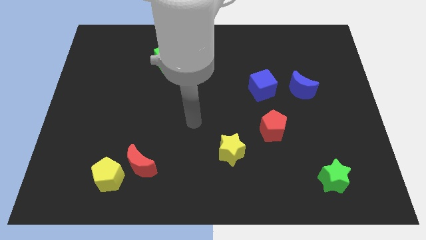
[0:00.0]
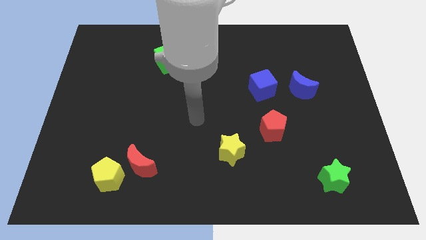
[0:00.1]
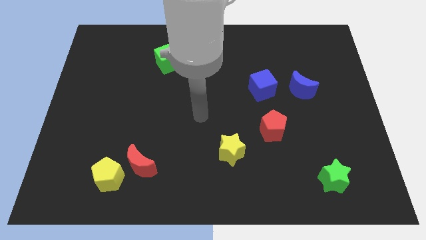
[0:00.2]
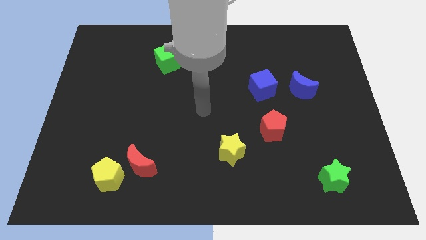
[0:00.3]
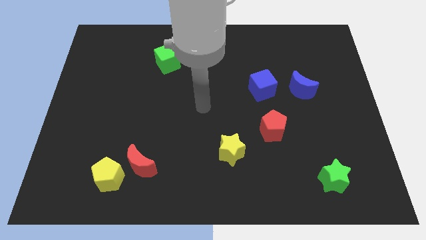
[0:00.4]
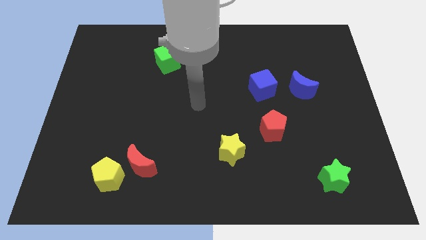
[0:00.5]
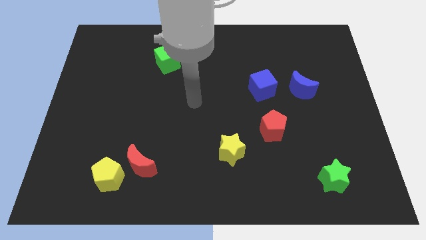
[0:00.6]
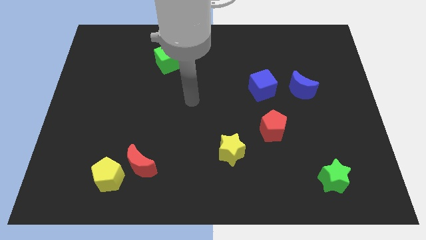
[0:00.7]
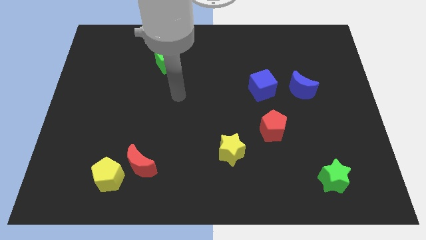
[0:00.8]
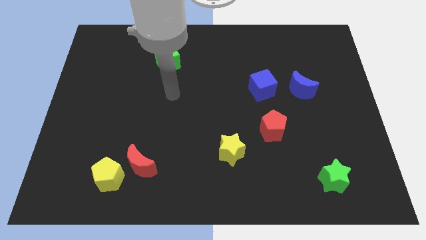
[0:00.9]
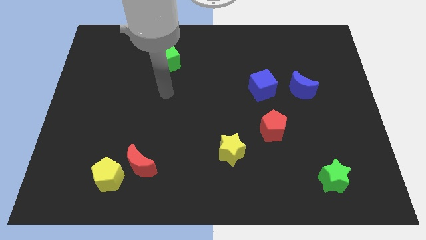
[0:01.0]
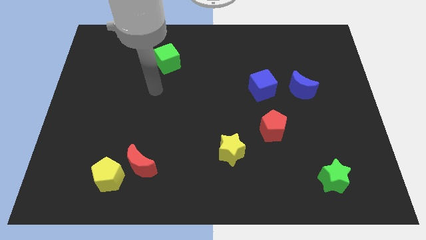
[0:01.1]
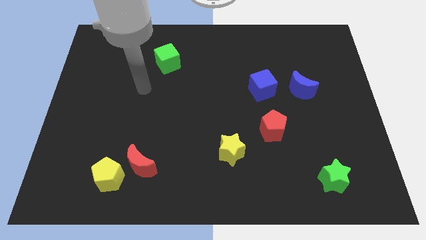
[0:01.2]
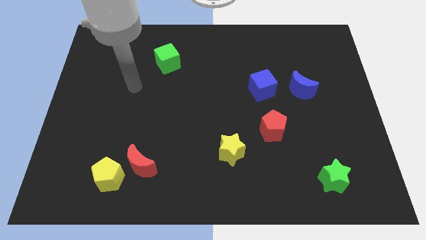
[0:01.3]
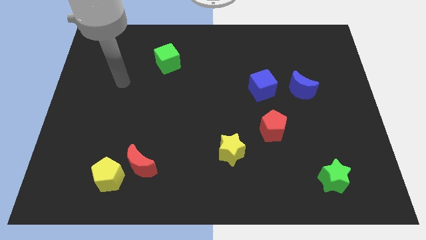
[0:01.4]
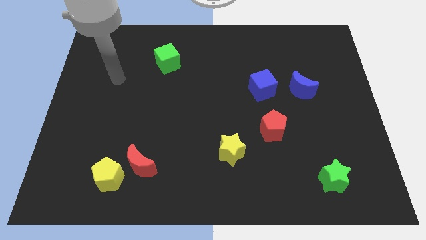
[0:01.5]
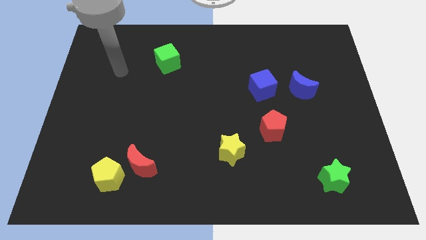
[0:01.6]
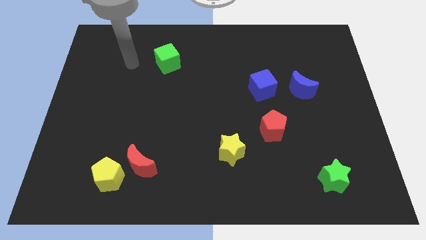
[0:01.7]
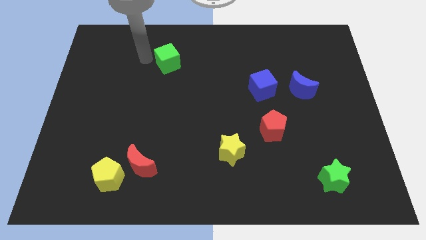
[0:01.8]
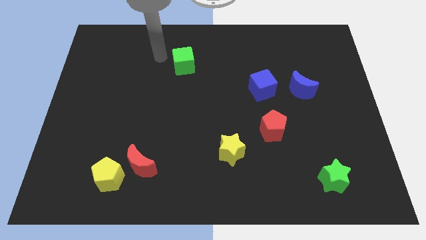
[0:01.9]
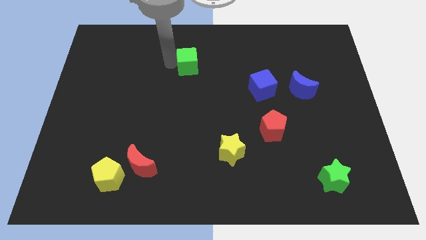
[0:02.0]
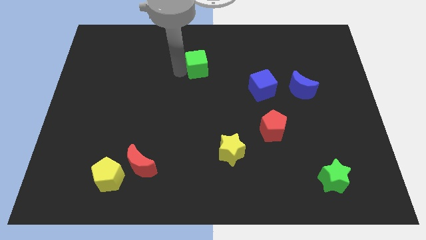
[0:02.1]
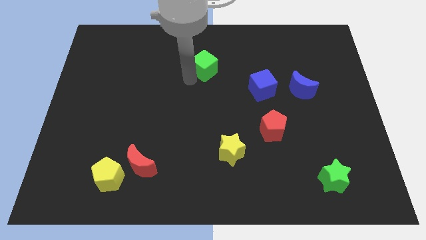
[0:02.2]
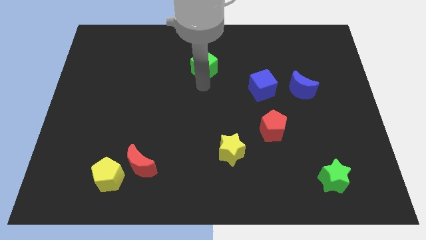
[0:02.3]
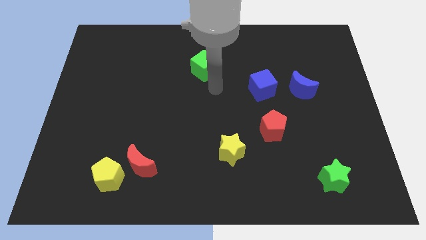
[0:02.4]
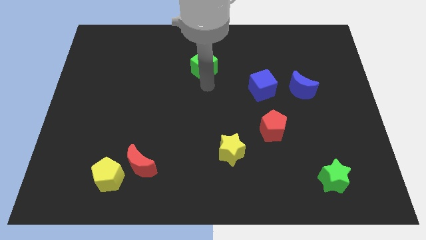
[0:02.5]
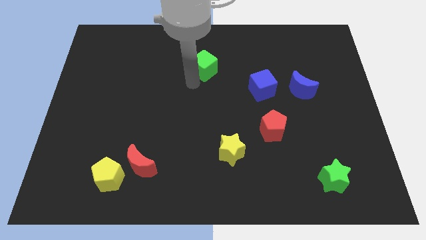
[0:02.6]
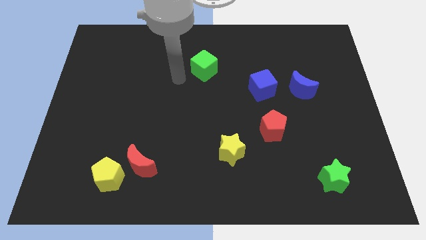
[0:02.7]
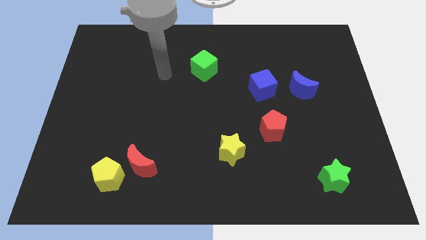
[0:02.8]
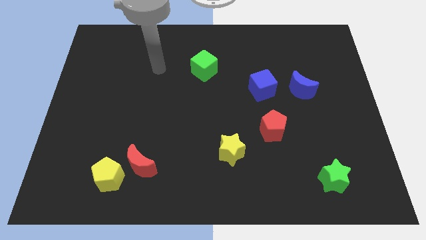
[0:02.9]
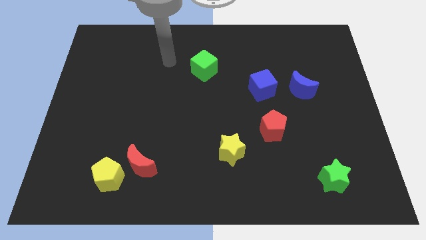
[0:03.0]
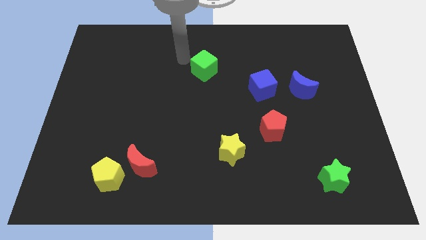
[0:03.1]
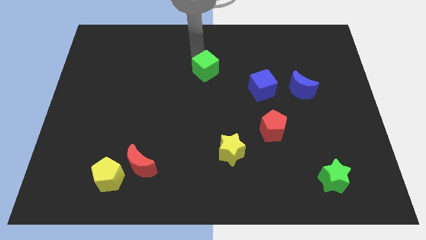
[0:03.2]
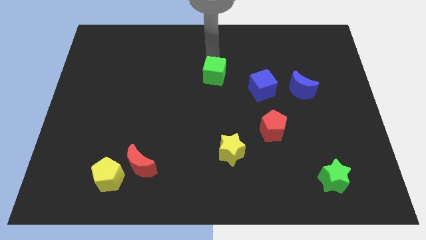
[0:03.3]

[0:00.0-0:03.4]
slide the green cube towards the blue cube

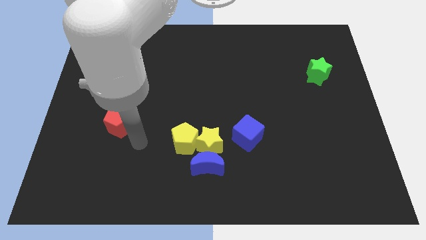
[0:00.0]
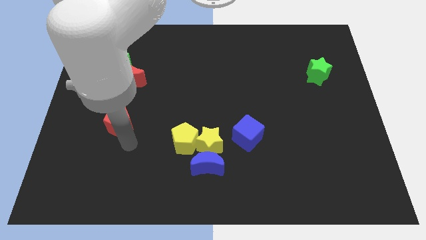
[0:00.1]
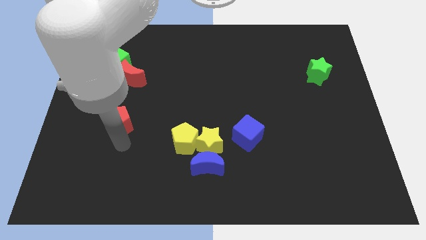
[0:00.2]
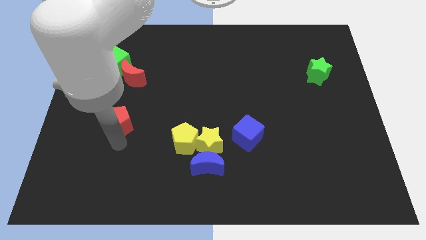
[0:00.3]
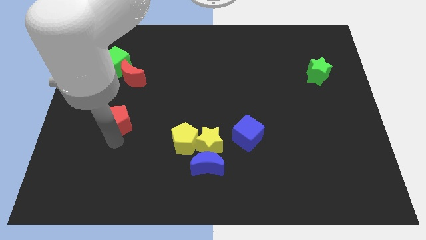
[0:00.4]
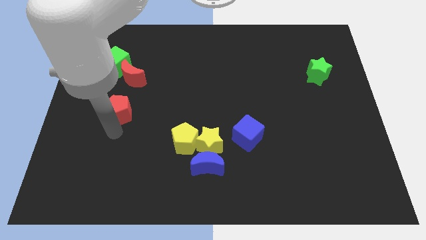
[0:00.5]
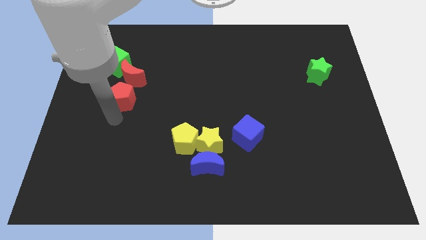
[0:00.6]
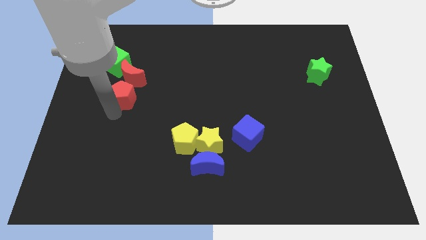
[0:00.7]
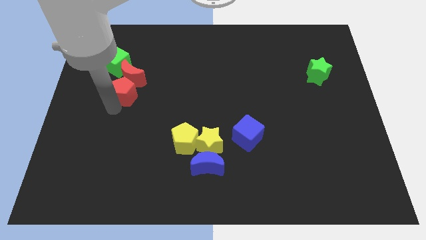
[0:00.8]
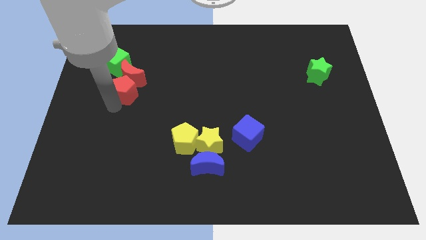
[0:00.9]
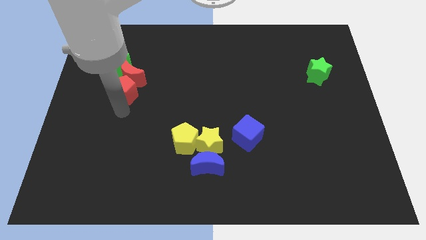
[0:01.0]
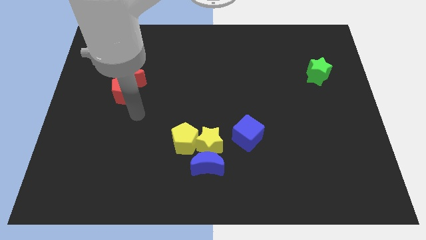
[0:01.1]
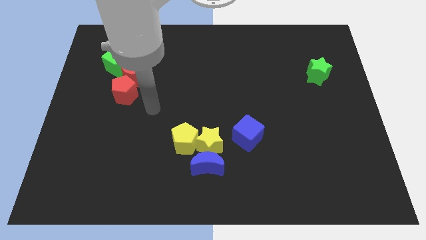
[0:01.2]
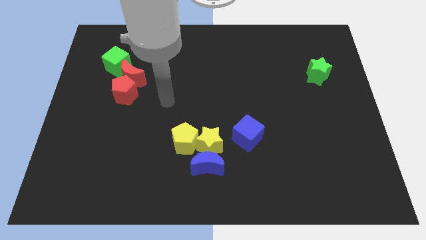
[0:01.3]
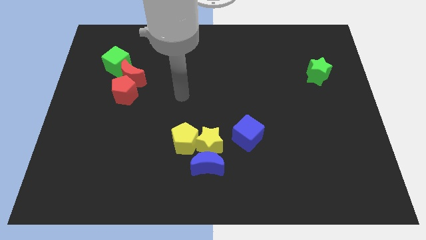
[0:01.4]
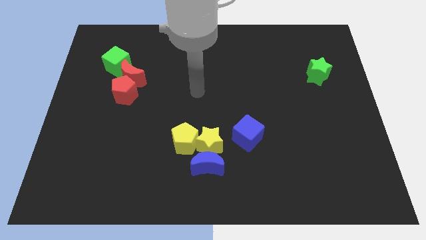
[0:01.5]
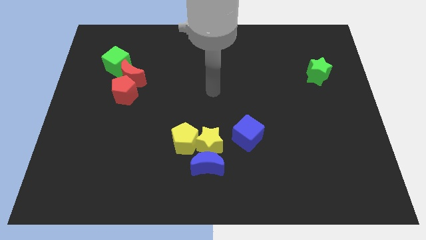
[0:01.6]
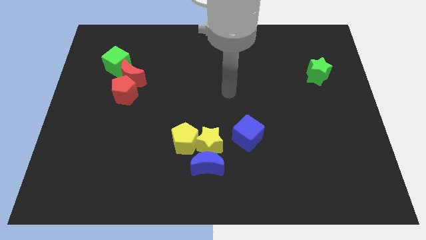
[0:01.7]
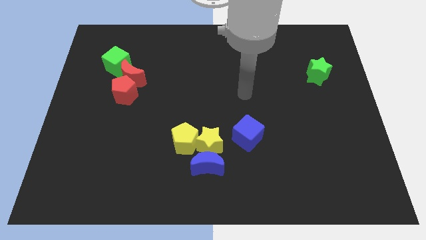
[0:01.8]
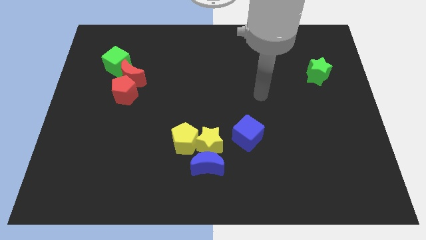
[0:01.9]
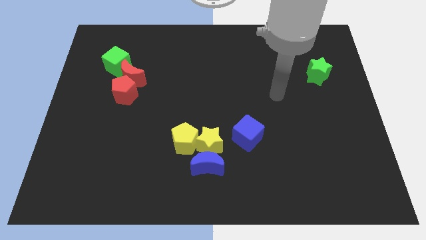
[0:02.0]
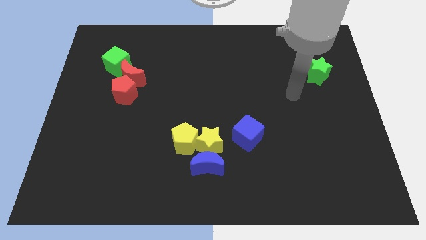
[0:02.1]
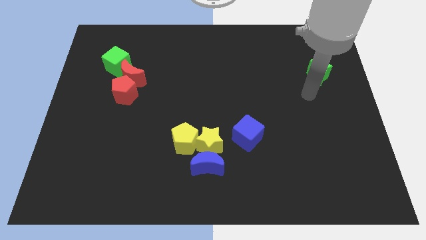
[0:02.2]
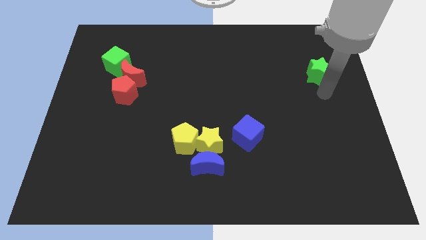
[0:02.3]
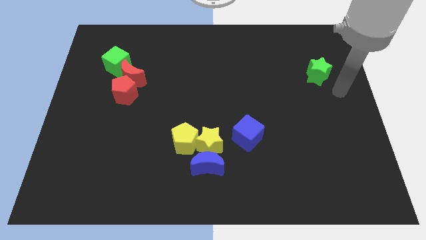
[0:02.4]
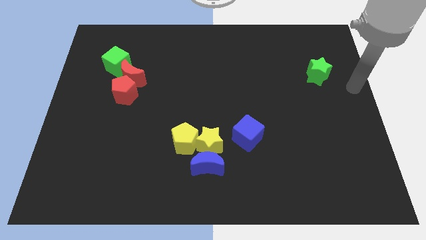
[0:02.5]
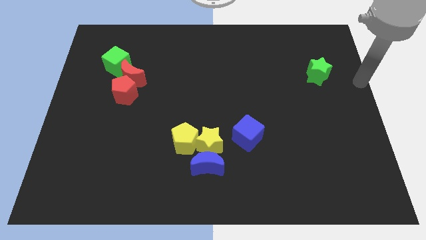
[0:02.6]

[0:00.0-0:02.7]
push the red pentagon into the red moon

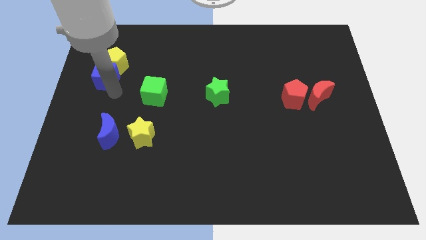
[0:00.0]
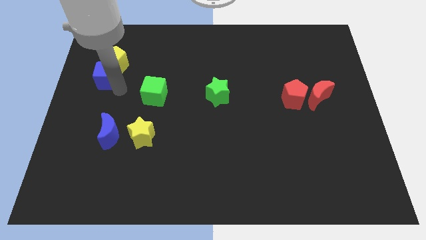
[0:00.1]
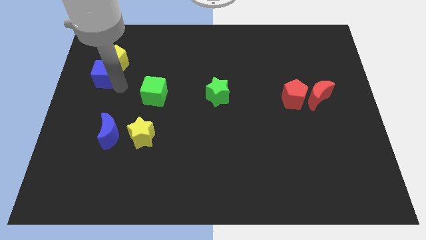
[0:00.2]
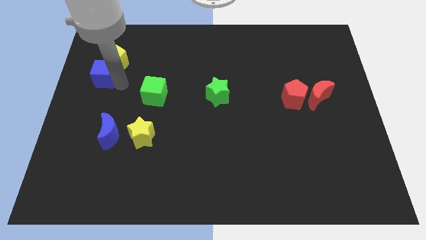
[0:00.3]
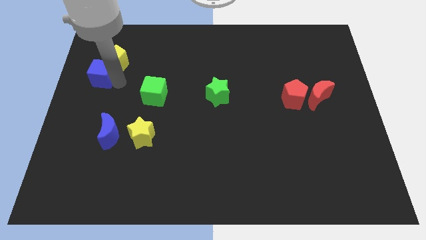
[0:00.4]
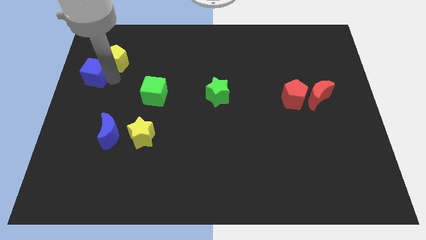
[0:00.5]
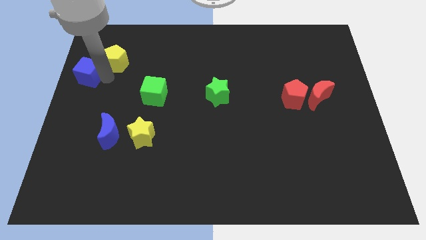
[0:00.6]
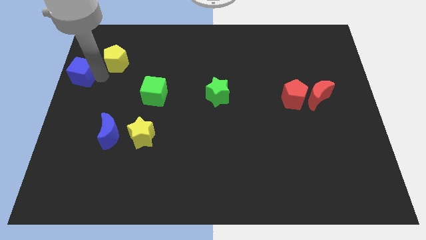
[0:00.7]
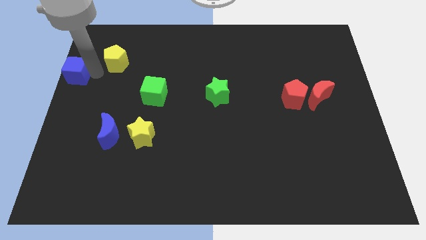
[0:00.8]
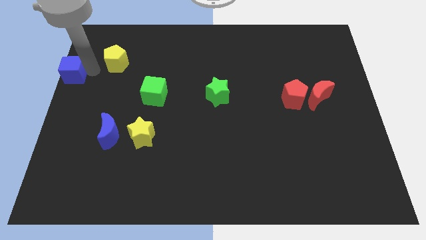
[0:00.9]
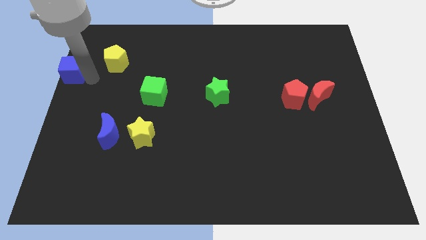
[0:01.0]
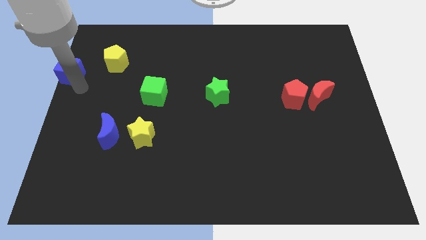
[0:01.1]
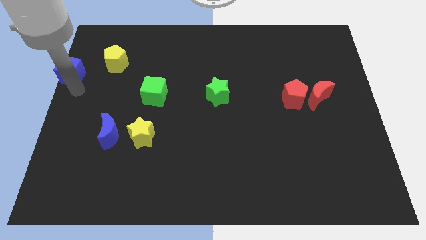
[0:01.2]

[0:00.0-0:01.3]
separate the blue cube and the yellow pentagon

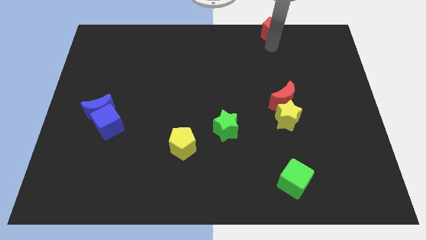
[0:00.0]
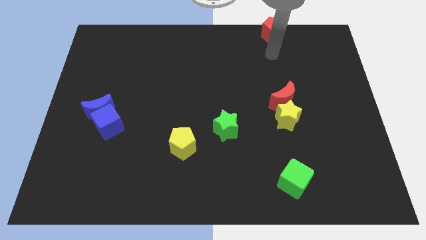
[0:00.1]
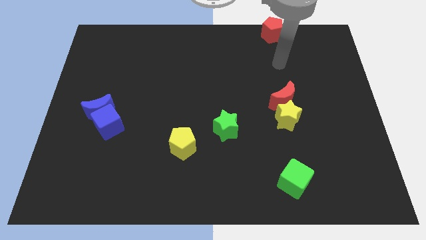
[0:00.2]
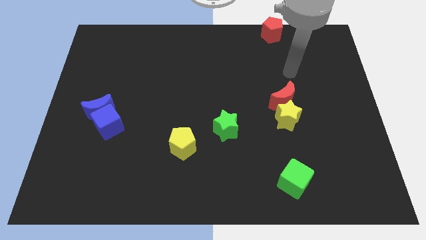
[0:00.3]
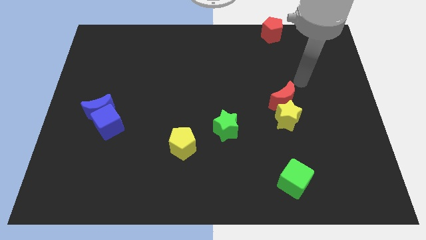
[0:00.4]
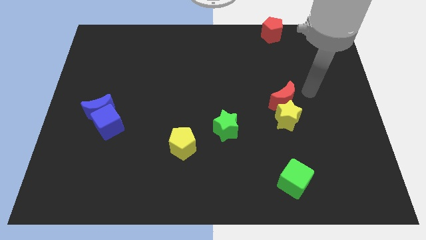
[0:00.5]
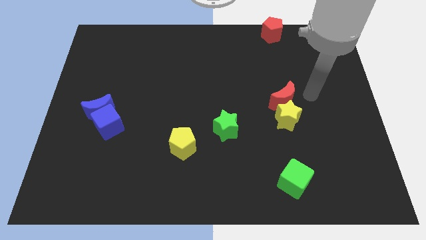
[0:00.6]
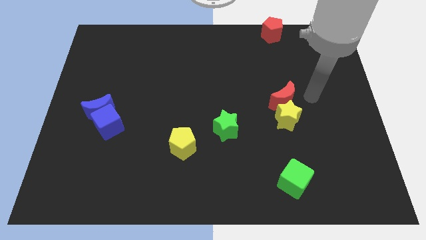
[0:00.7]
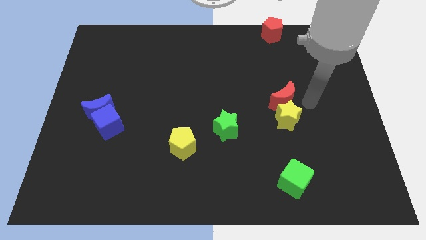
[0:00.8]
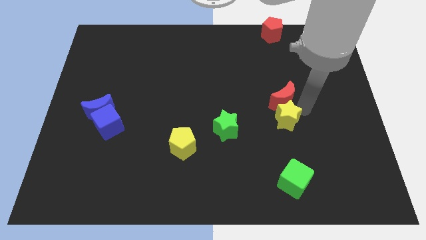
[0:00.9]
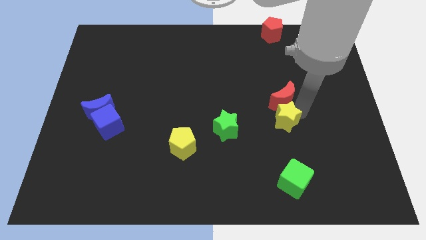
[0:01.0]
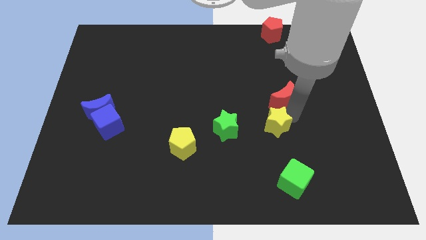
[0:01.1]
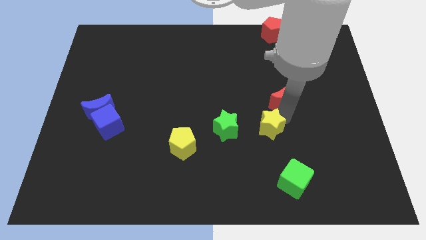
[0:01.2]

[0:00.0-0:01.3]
move the yellow star slightly to the left

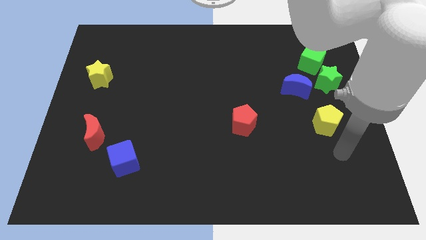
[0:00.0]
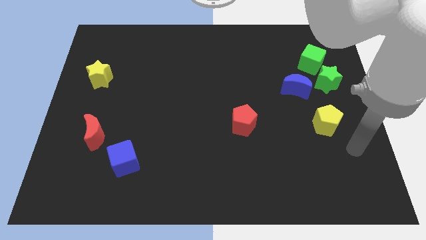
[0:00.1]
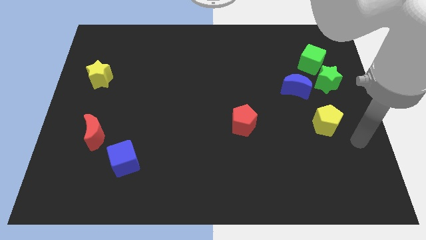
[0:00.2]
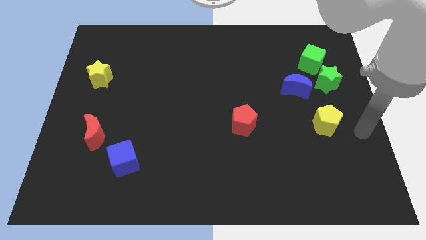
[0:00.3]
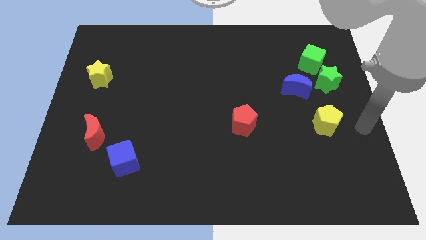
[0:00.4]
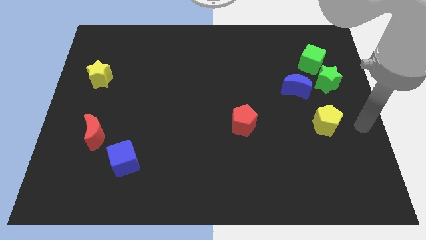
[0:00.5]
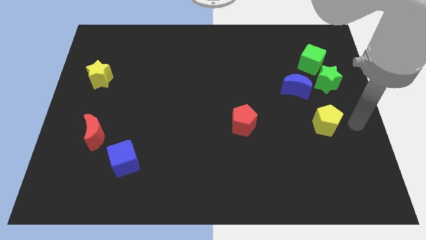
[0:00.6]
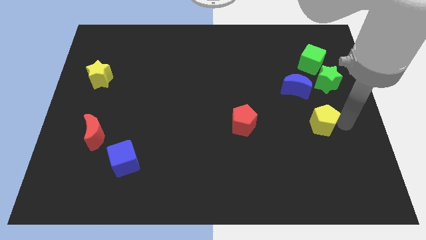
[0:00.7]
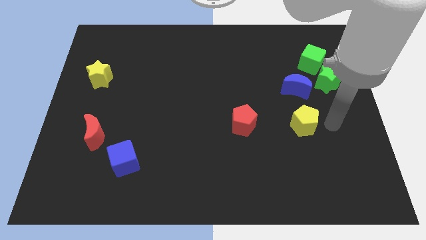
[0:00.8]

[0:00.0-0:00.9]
place yellow pentagon parallel right to red pentagon
